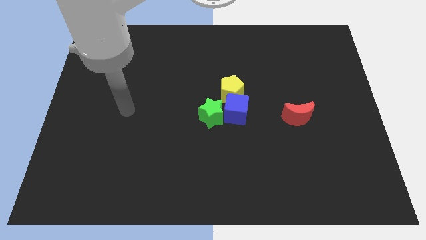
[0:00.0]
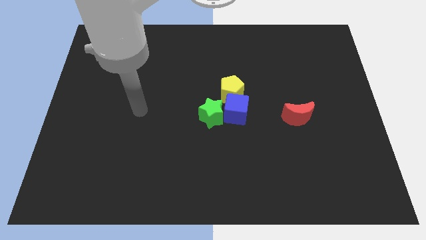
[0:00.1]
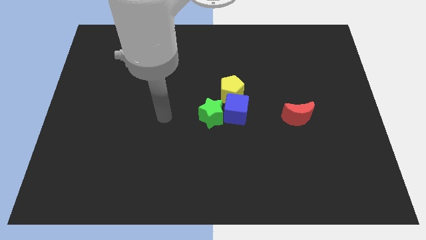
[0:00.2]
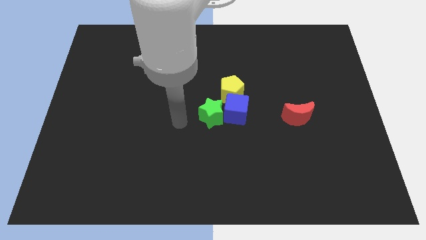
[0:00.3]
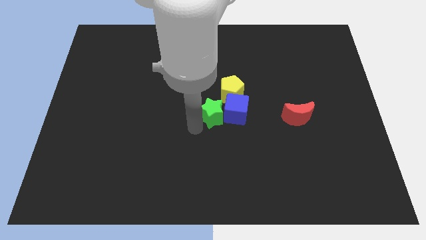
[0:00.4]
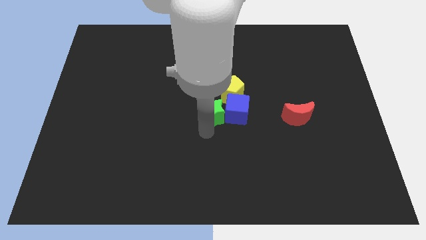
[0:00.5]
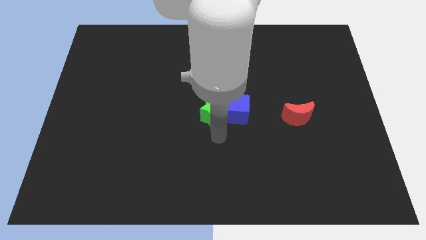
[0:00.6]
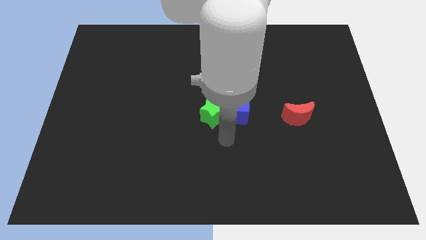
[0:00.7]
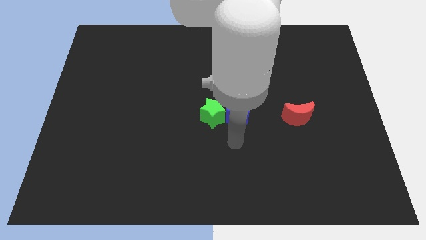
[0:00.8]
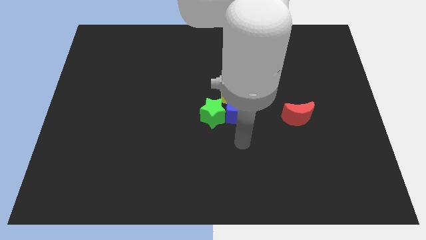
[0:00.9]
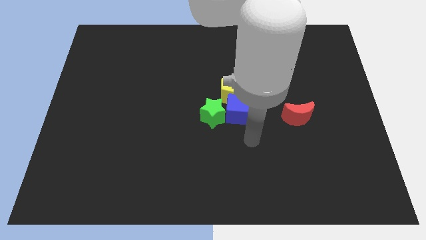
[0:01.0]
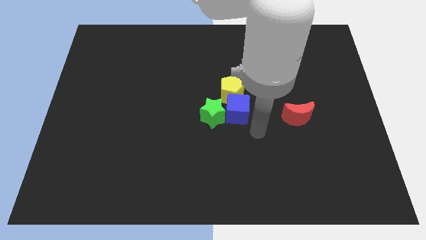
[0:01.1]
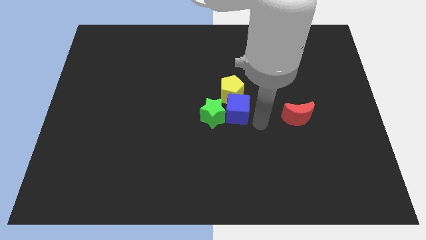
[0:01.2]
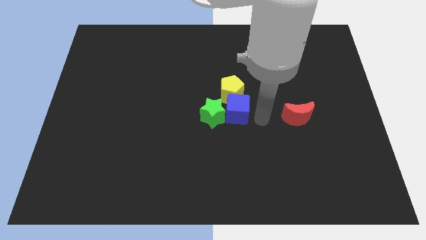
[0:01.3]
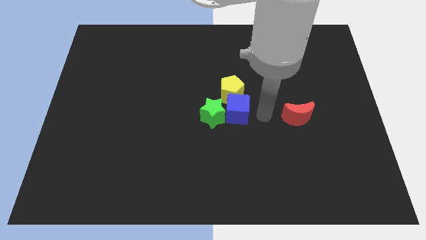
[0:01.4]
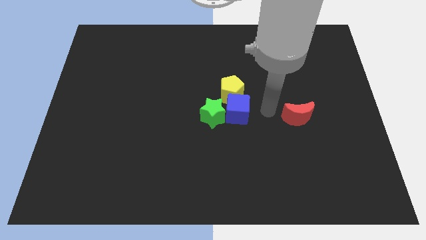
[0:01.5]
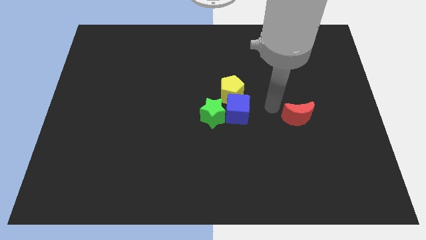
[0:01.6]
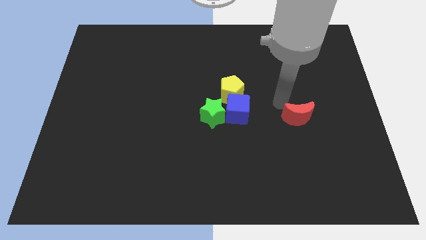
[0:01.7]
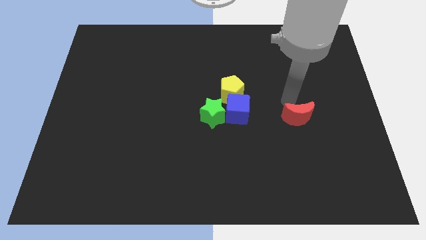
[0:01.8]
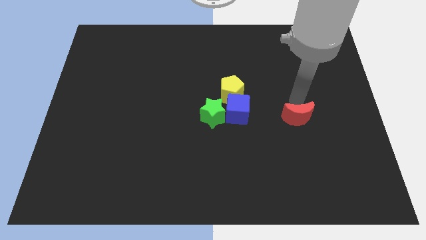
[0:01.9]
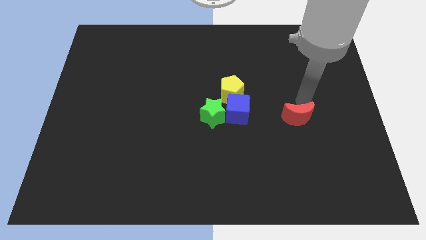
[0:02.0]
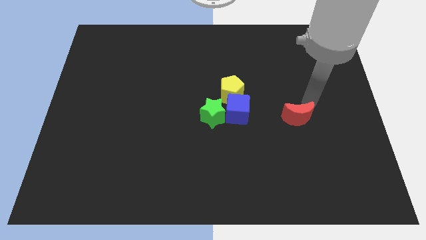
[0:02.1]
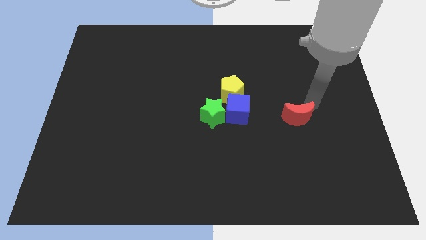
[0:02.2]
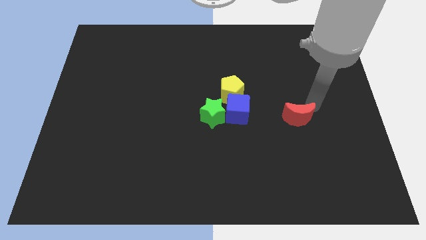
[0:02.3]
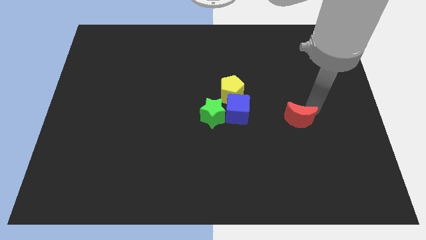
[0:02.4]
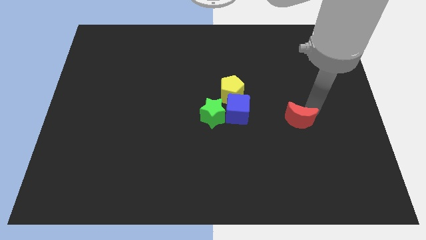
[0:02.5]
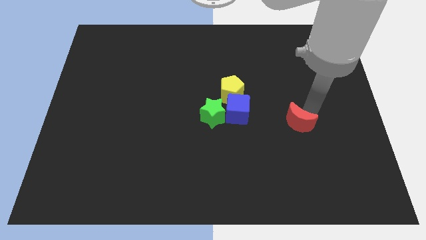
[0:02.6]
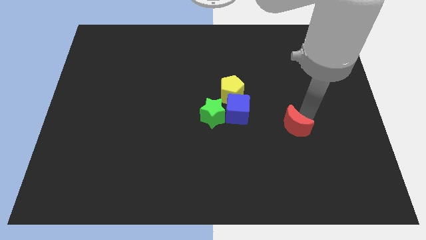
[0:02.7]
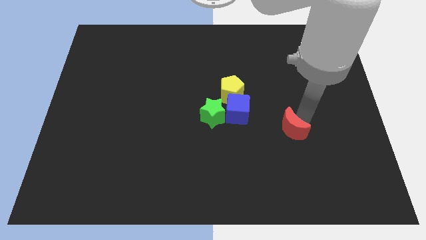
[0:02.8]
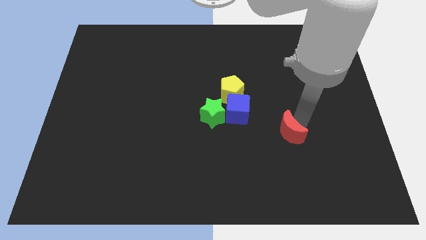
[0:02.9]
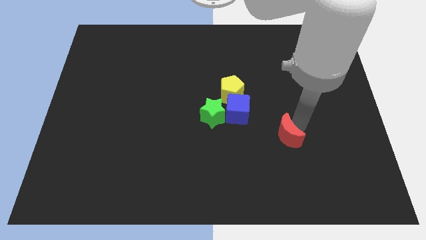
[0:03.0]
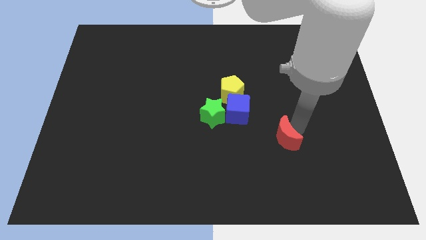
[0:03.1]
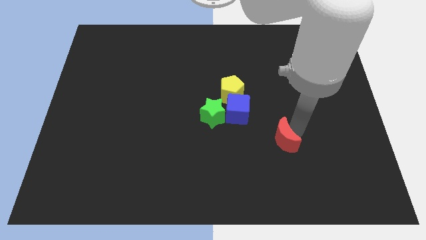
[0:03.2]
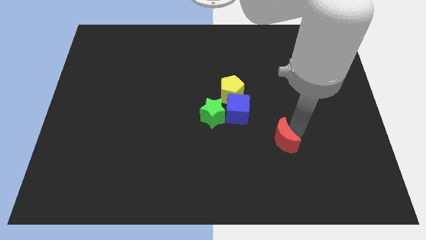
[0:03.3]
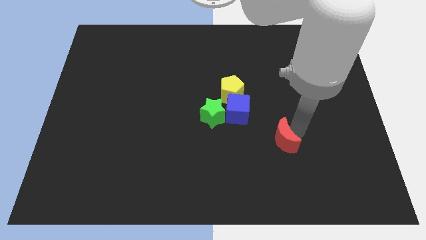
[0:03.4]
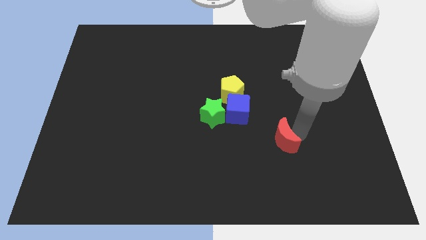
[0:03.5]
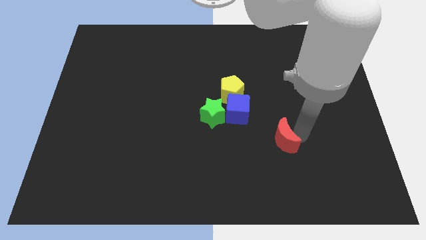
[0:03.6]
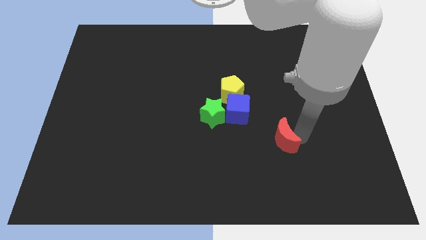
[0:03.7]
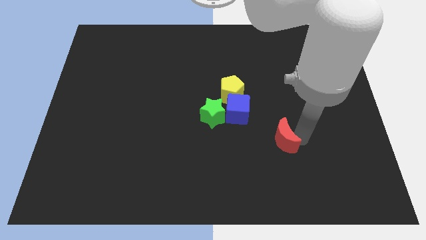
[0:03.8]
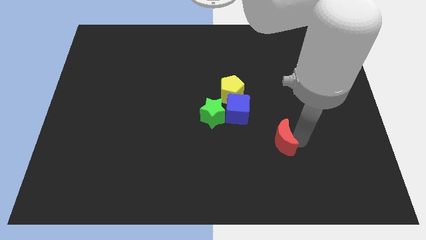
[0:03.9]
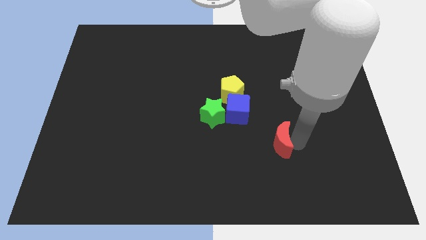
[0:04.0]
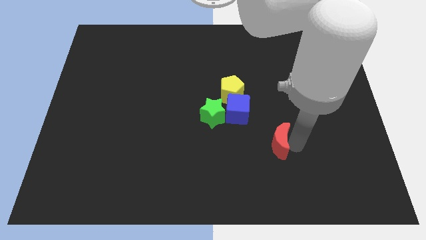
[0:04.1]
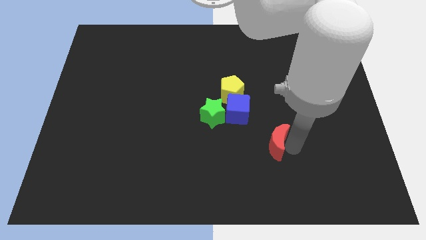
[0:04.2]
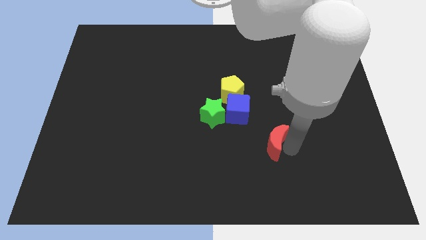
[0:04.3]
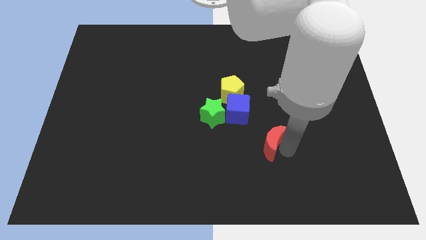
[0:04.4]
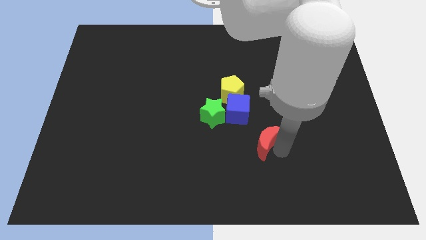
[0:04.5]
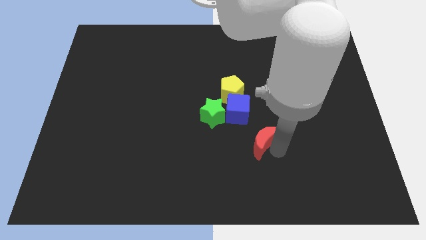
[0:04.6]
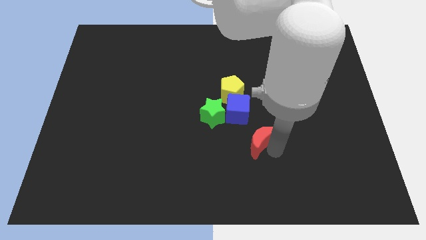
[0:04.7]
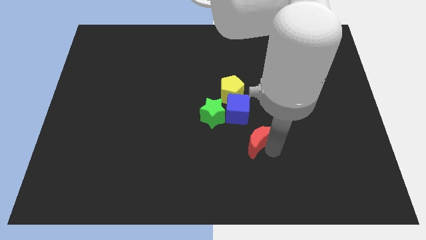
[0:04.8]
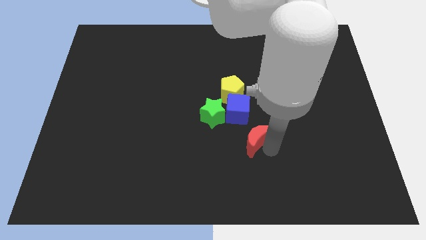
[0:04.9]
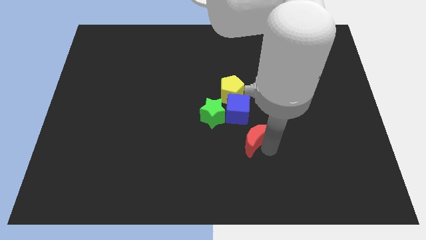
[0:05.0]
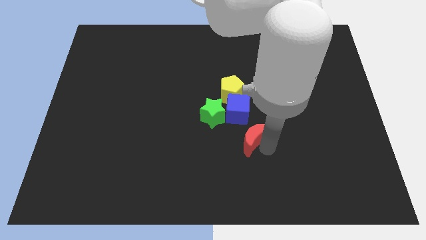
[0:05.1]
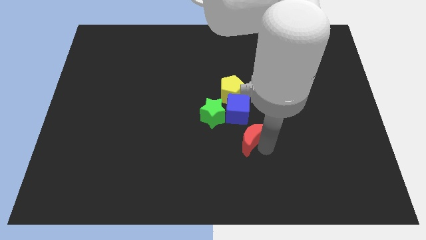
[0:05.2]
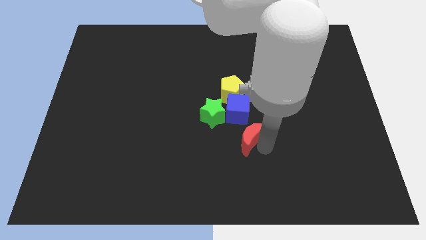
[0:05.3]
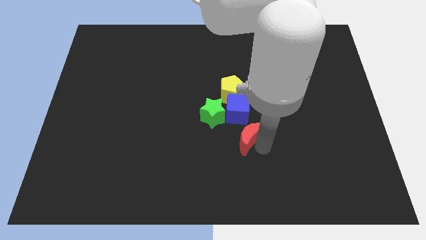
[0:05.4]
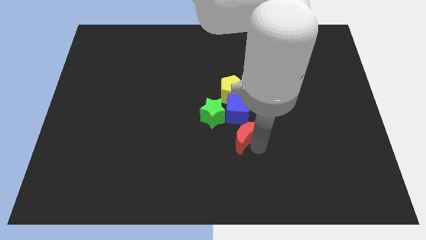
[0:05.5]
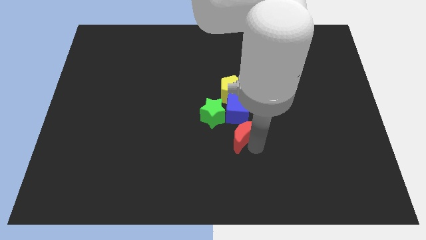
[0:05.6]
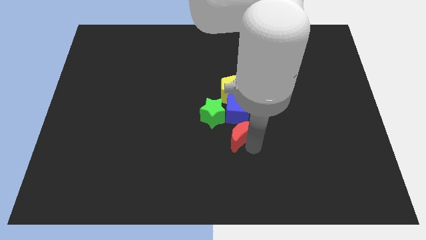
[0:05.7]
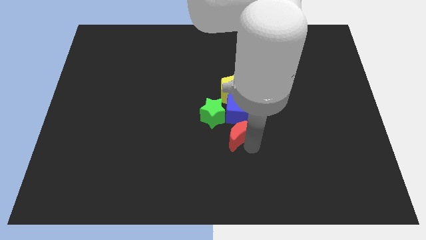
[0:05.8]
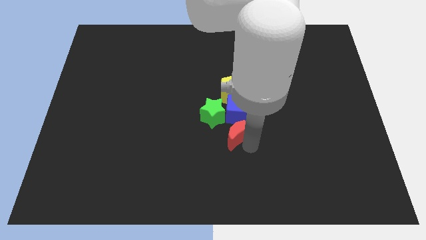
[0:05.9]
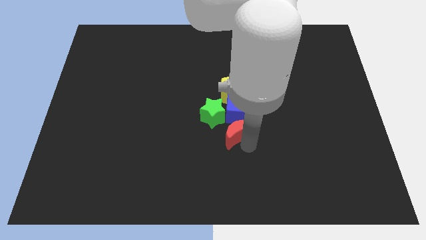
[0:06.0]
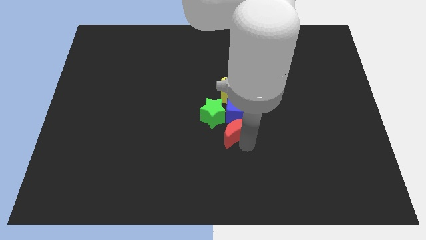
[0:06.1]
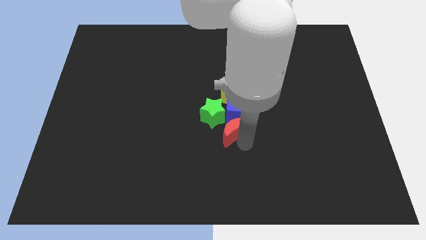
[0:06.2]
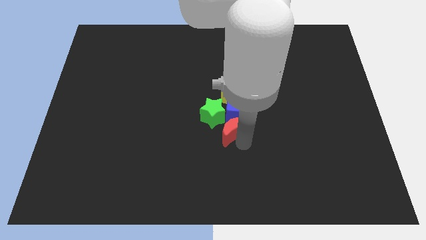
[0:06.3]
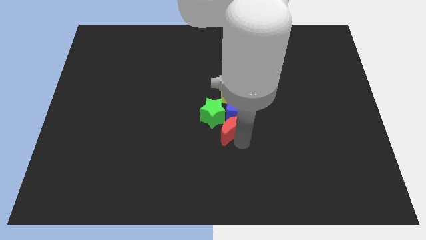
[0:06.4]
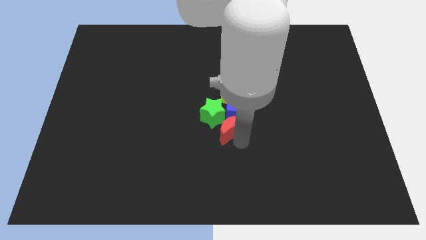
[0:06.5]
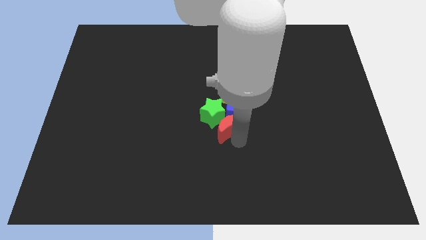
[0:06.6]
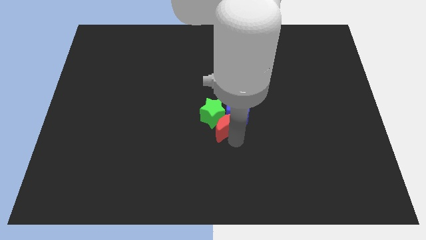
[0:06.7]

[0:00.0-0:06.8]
slide the red block towards the green star

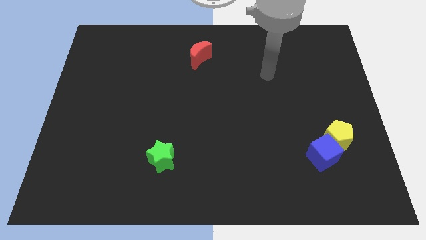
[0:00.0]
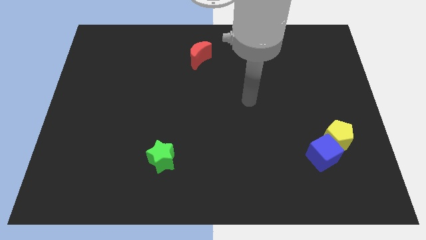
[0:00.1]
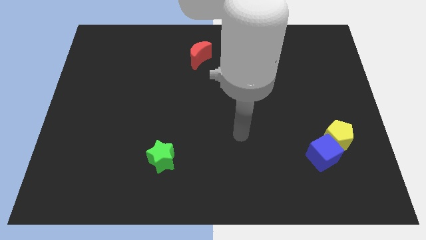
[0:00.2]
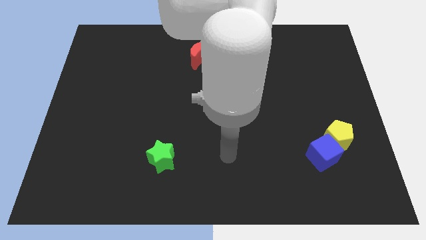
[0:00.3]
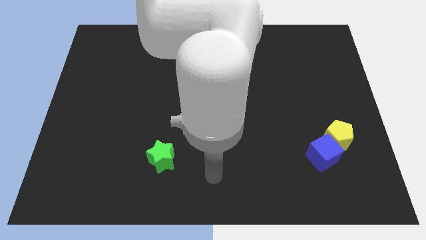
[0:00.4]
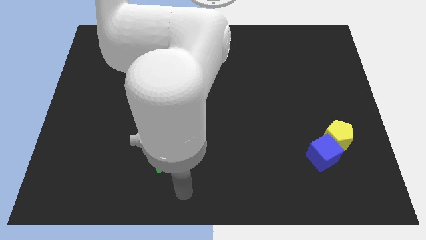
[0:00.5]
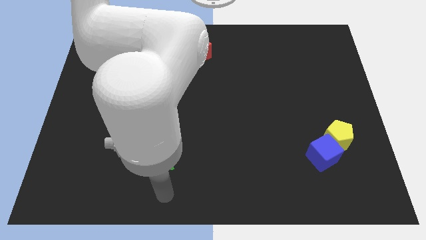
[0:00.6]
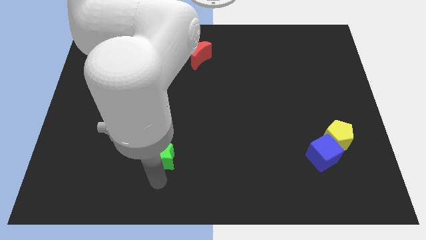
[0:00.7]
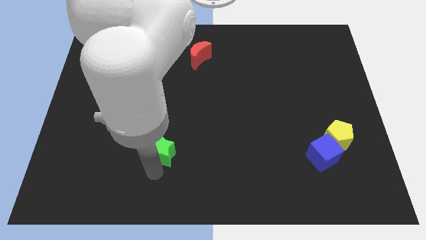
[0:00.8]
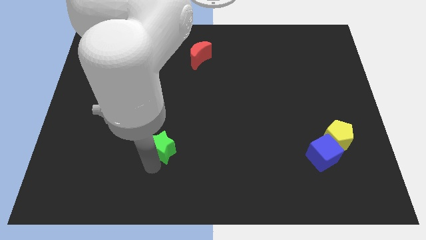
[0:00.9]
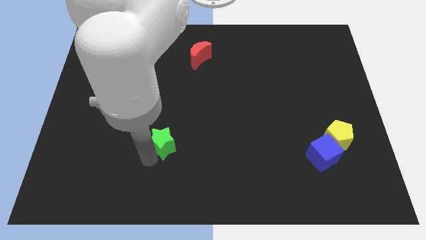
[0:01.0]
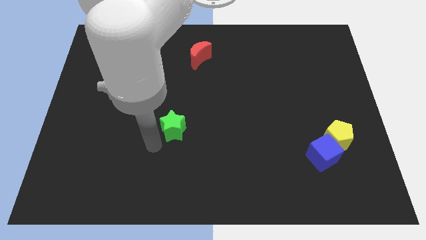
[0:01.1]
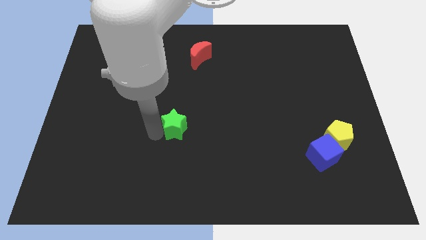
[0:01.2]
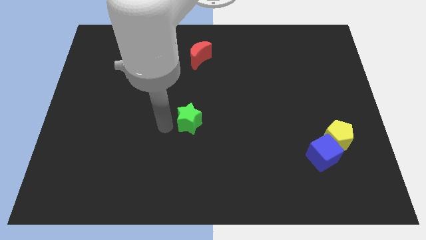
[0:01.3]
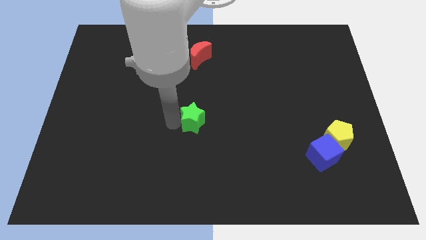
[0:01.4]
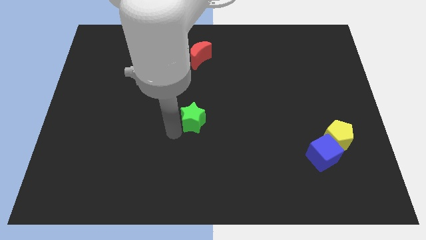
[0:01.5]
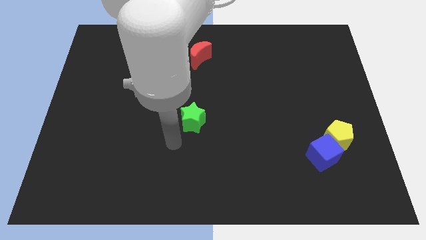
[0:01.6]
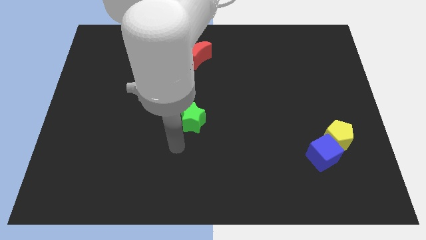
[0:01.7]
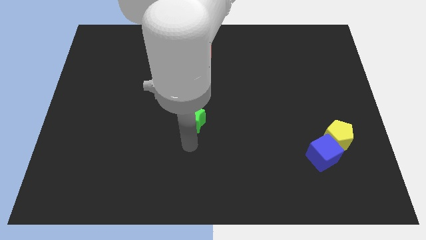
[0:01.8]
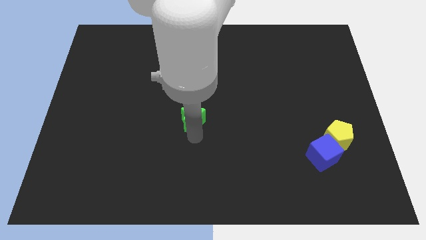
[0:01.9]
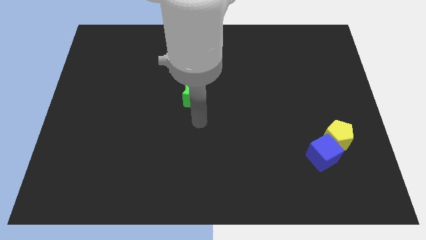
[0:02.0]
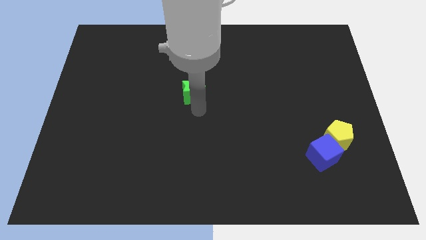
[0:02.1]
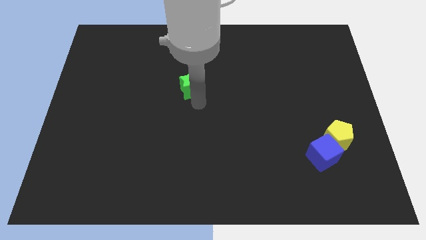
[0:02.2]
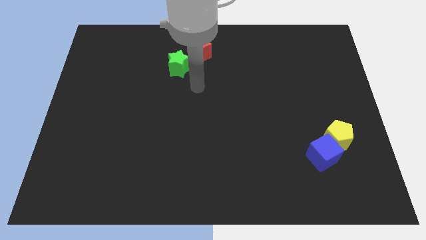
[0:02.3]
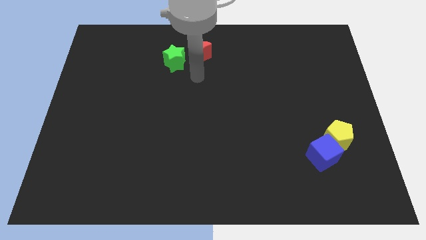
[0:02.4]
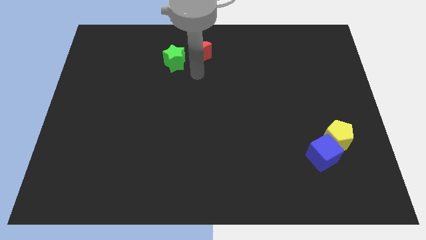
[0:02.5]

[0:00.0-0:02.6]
push the star towards the moon
